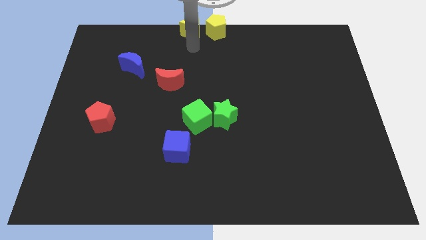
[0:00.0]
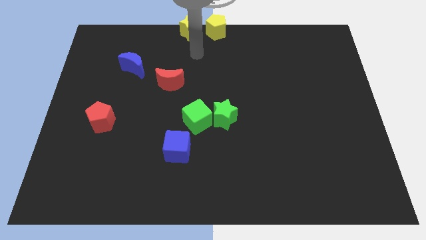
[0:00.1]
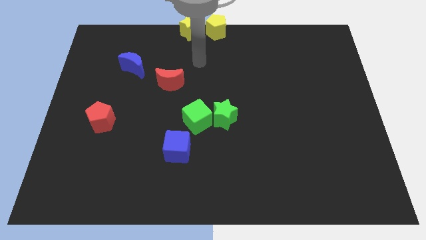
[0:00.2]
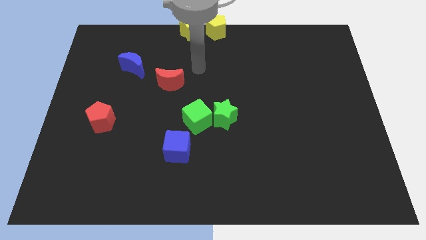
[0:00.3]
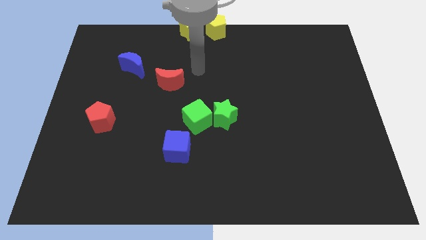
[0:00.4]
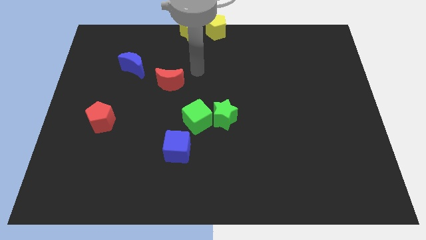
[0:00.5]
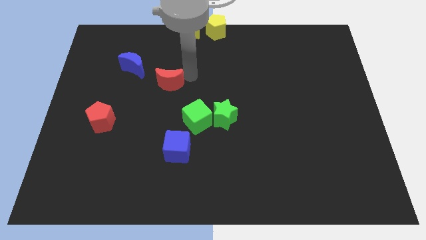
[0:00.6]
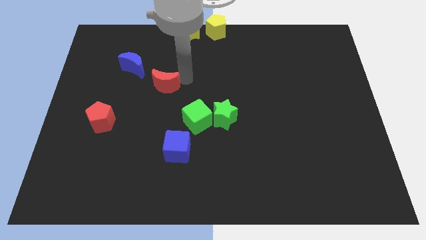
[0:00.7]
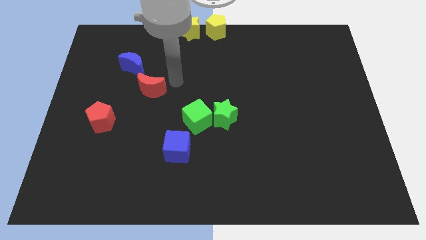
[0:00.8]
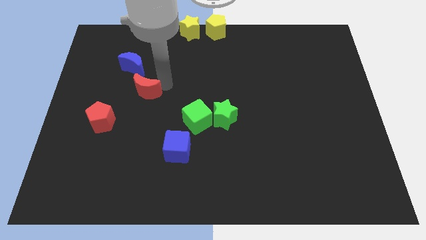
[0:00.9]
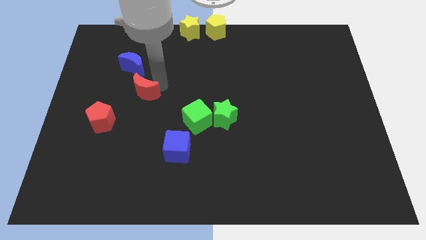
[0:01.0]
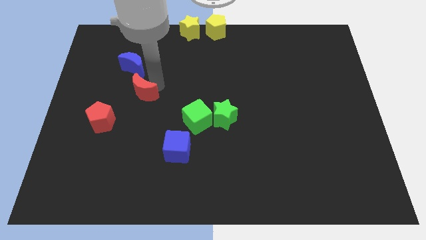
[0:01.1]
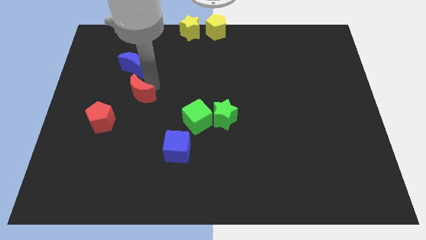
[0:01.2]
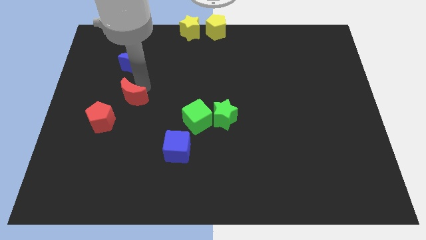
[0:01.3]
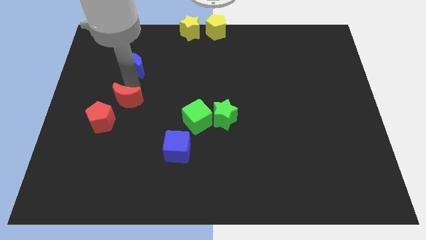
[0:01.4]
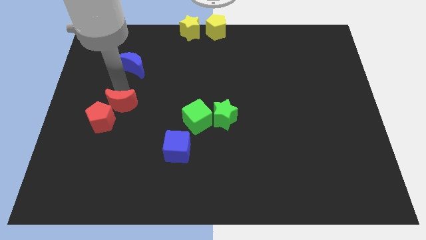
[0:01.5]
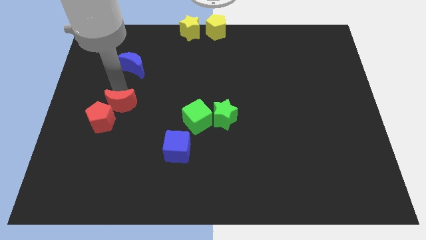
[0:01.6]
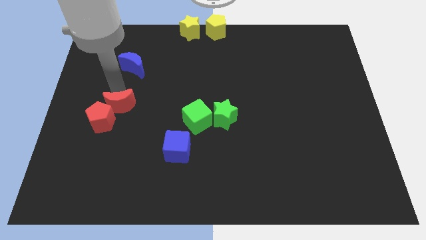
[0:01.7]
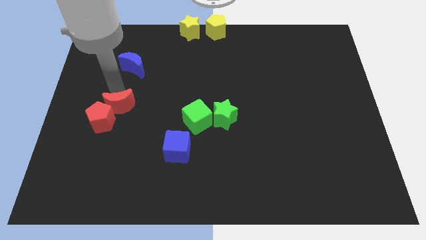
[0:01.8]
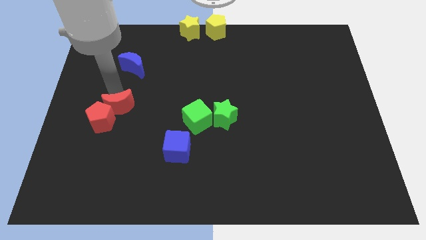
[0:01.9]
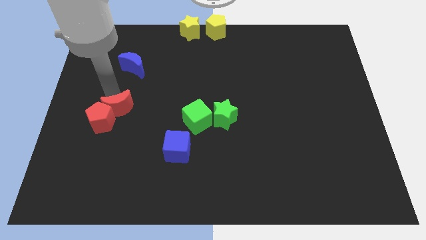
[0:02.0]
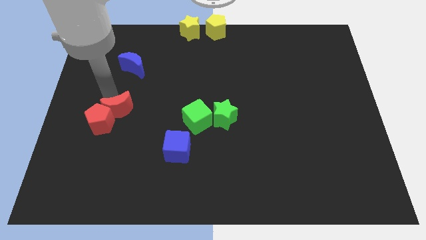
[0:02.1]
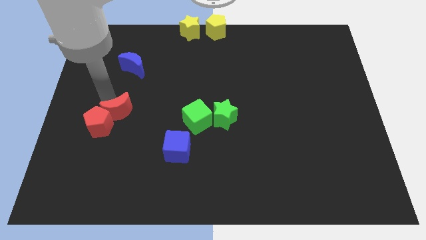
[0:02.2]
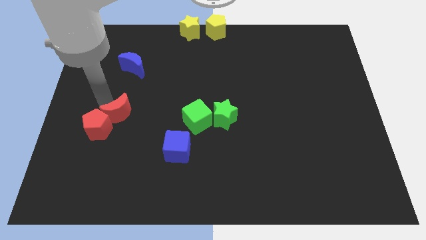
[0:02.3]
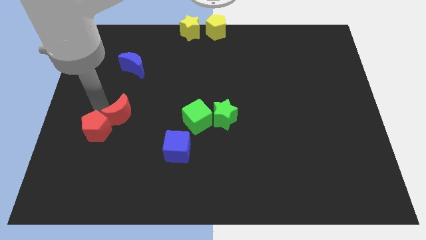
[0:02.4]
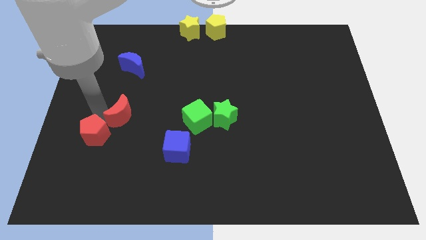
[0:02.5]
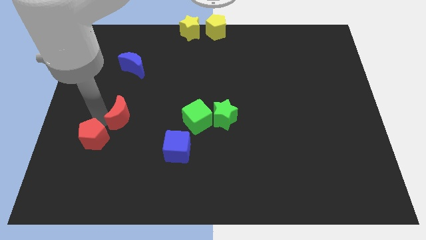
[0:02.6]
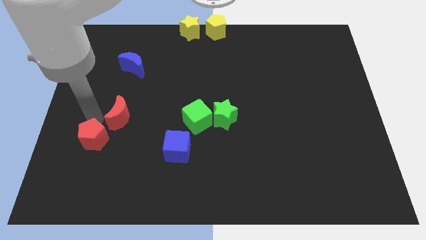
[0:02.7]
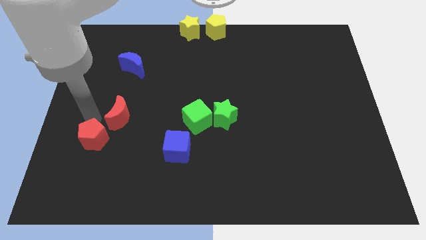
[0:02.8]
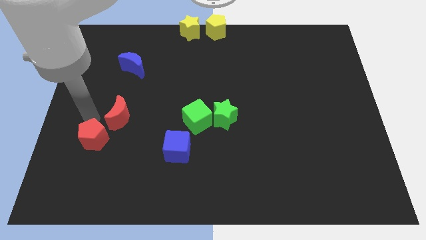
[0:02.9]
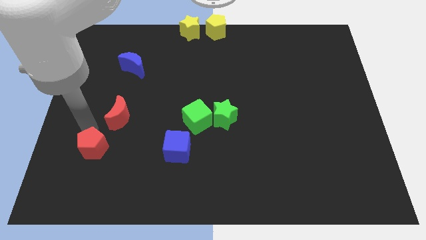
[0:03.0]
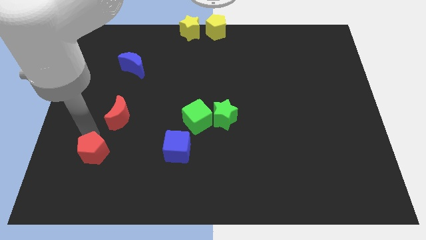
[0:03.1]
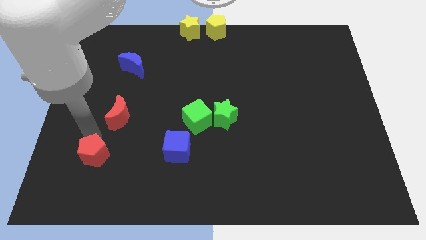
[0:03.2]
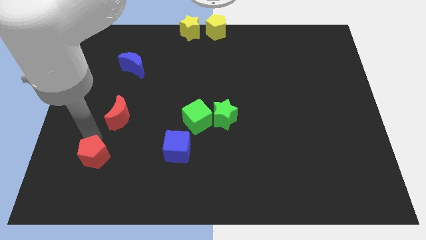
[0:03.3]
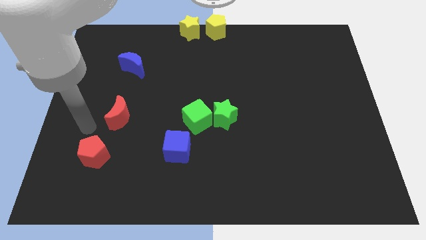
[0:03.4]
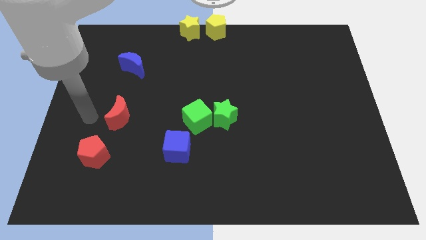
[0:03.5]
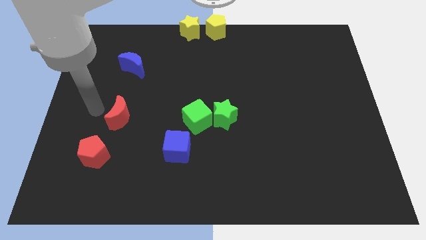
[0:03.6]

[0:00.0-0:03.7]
push both the red blocks to the bottom left side of the blue crescent

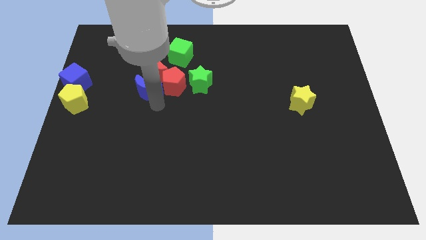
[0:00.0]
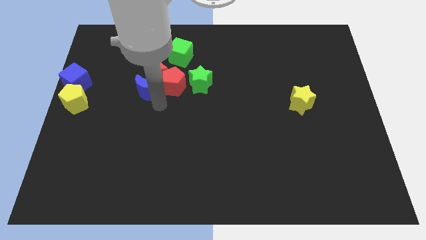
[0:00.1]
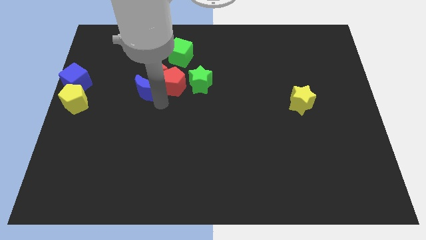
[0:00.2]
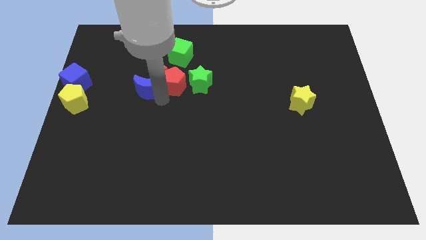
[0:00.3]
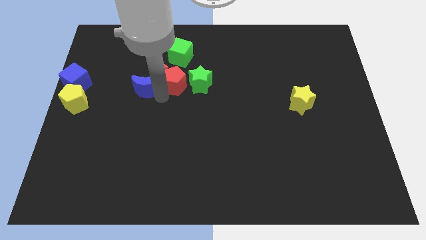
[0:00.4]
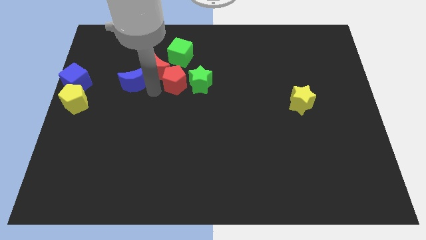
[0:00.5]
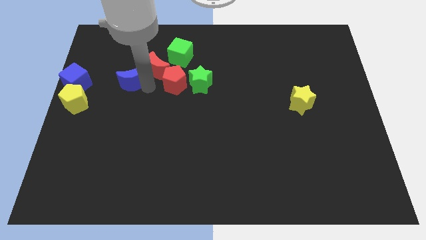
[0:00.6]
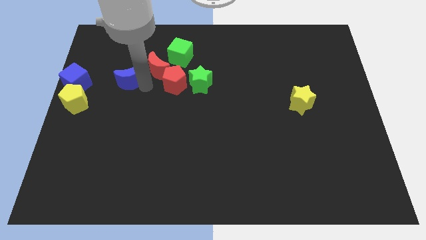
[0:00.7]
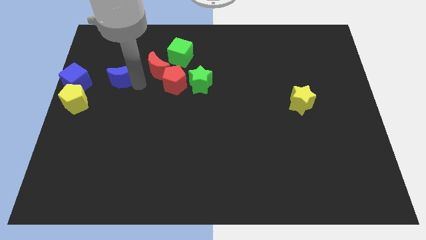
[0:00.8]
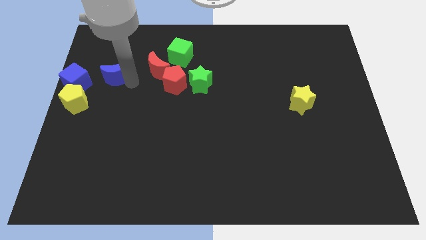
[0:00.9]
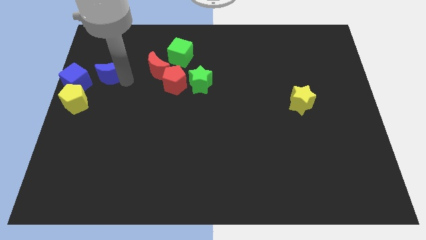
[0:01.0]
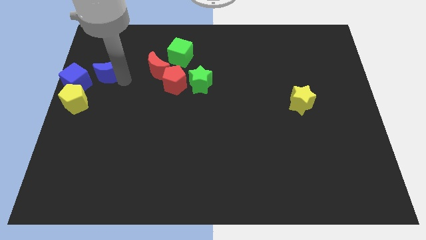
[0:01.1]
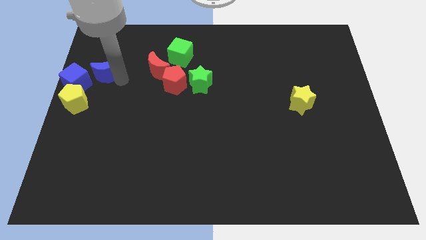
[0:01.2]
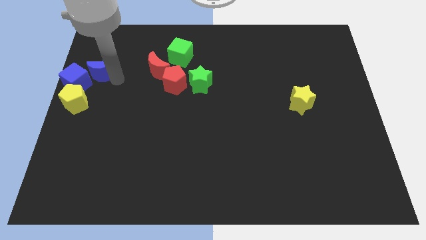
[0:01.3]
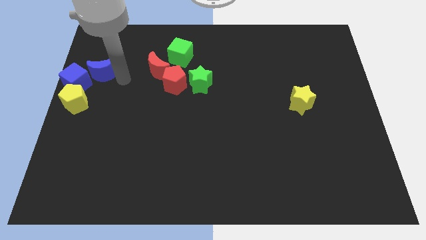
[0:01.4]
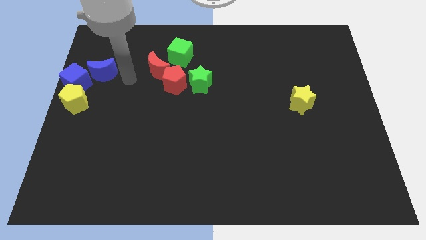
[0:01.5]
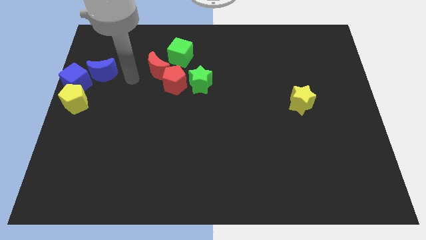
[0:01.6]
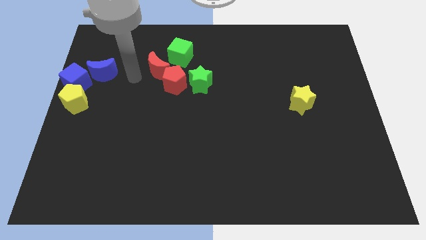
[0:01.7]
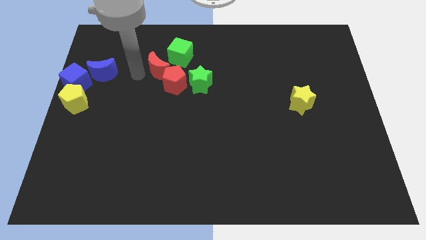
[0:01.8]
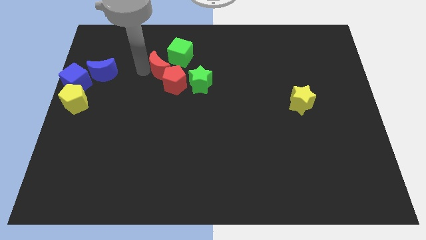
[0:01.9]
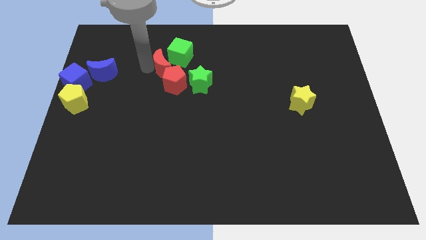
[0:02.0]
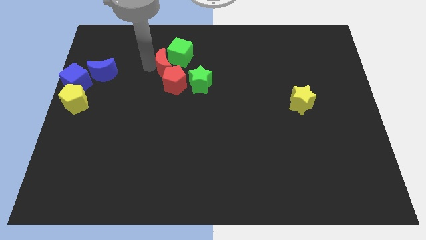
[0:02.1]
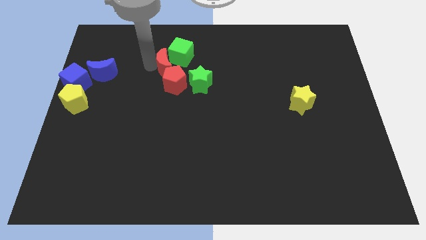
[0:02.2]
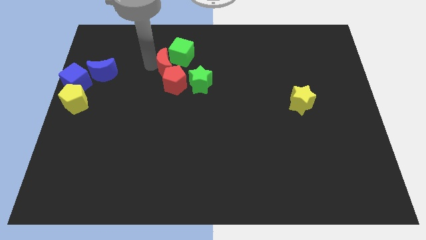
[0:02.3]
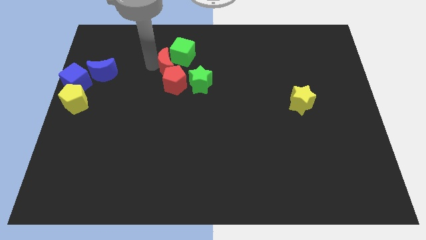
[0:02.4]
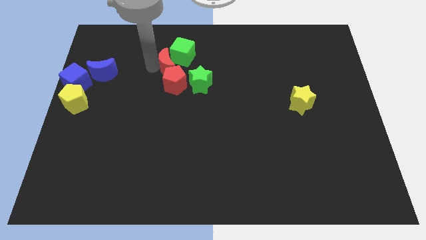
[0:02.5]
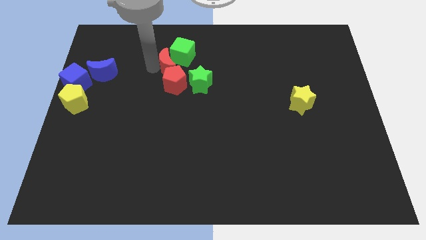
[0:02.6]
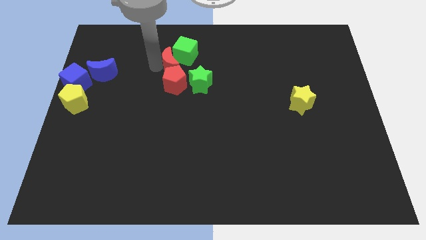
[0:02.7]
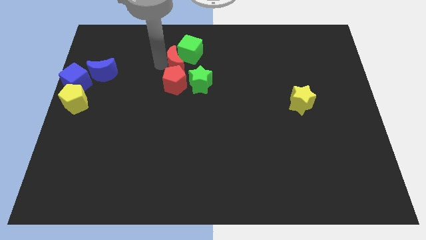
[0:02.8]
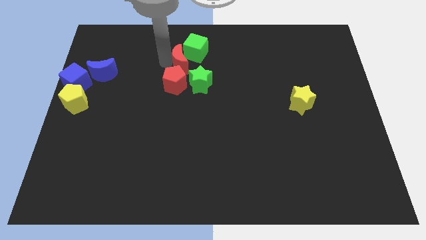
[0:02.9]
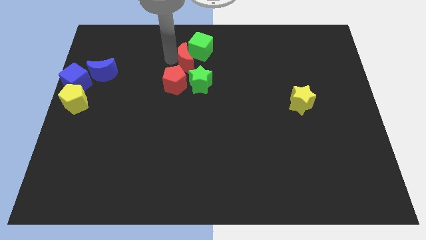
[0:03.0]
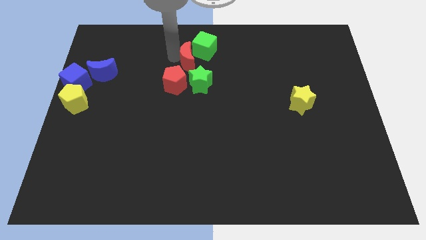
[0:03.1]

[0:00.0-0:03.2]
move the red moon into the green cube

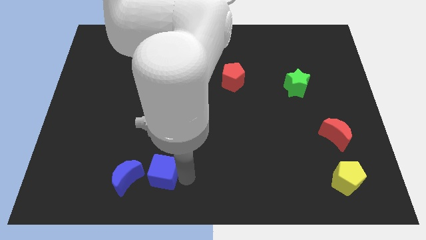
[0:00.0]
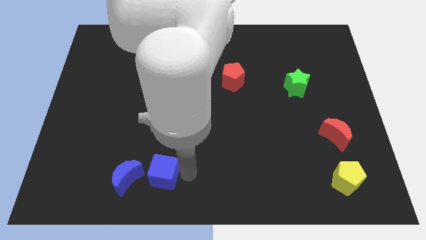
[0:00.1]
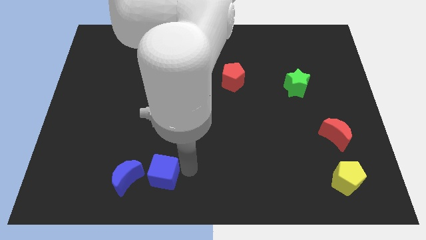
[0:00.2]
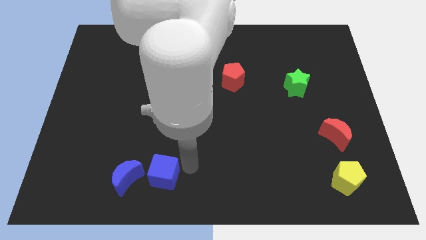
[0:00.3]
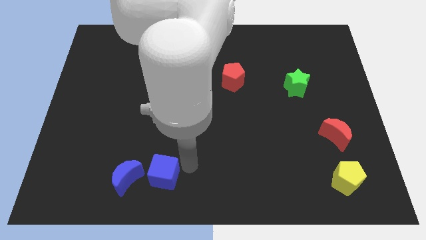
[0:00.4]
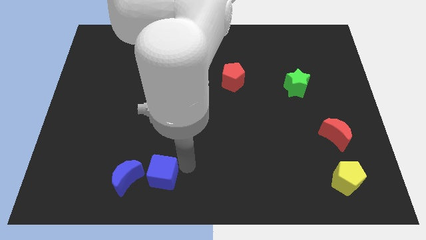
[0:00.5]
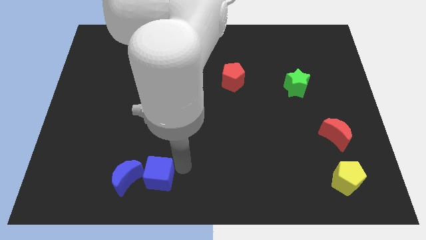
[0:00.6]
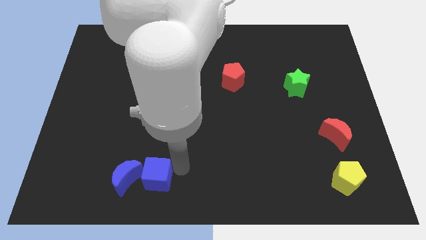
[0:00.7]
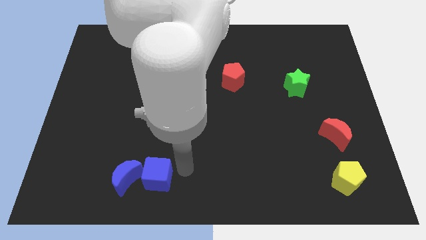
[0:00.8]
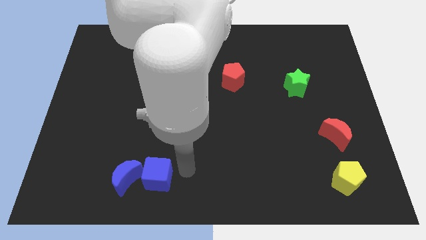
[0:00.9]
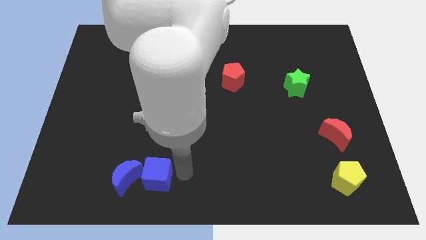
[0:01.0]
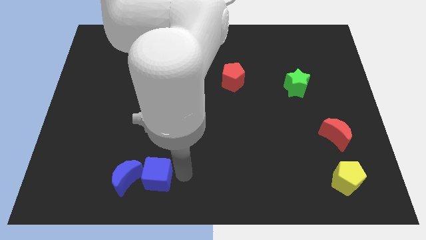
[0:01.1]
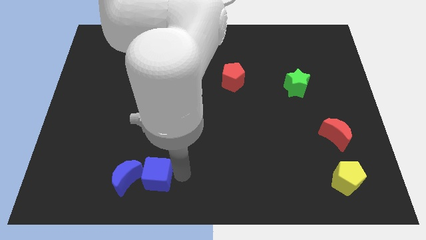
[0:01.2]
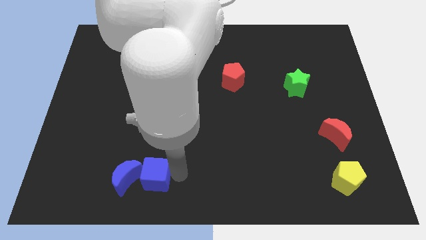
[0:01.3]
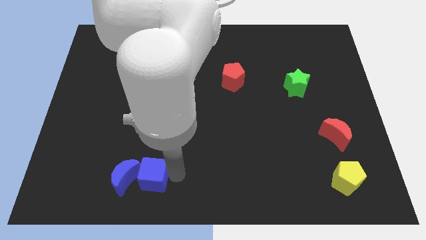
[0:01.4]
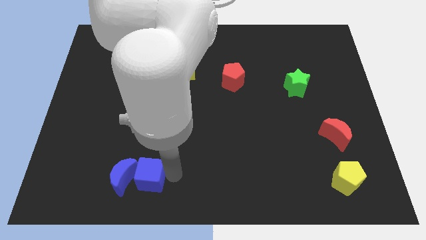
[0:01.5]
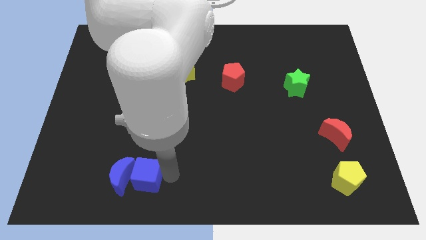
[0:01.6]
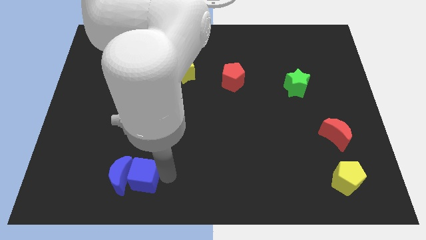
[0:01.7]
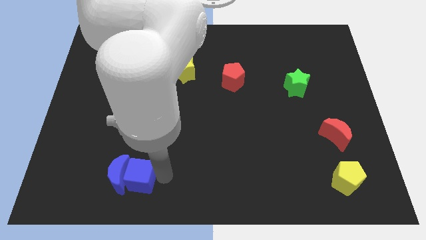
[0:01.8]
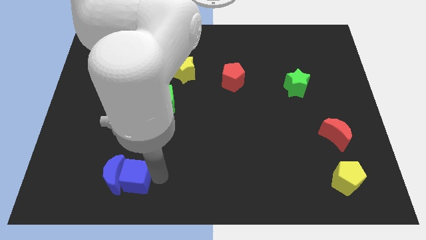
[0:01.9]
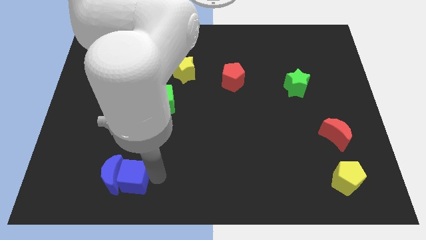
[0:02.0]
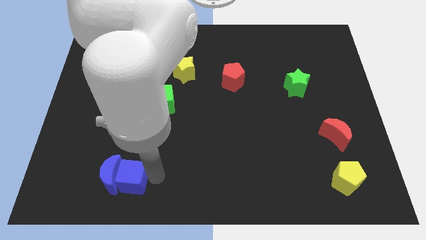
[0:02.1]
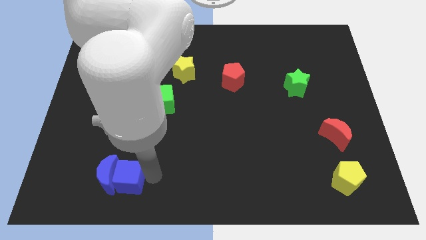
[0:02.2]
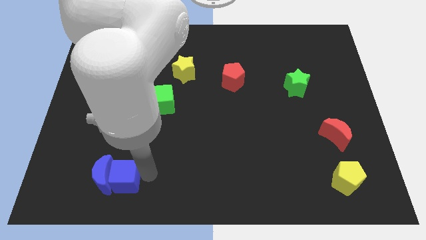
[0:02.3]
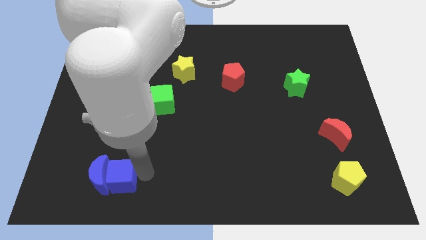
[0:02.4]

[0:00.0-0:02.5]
push the blue cube into blue crescent
